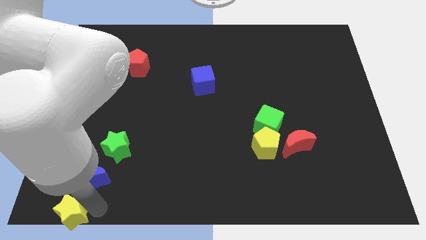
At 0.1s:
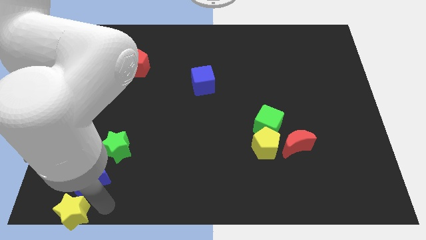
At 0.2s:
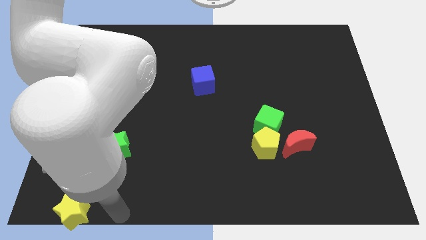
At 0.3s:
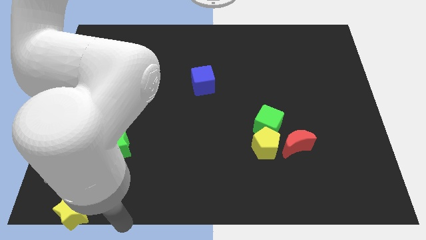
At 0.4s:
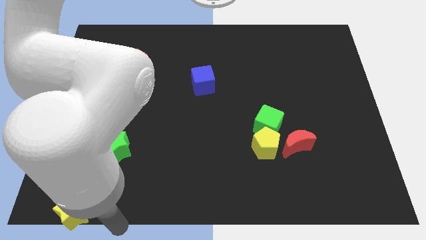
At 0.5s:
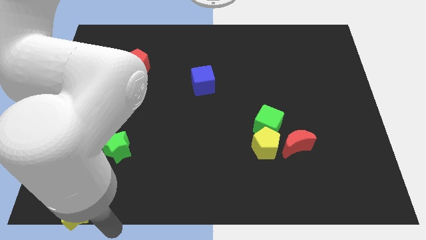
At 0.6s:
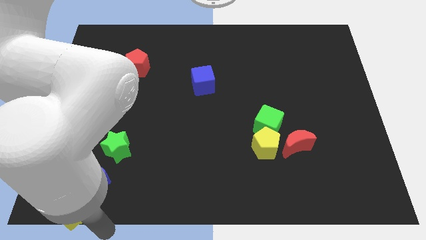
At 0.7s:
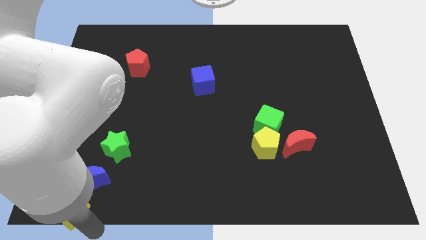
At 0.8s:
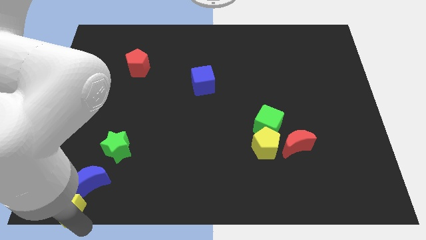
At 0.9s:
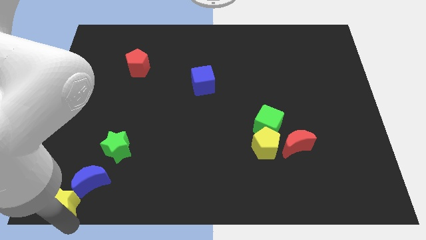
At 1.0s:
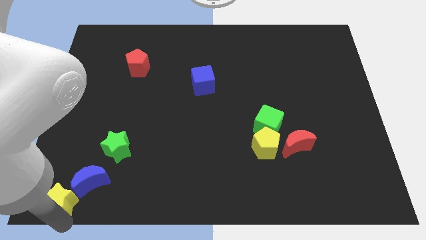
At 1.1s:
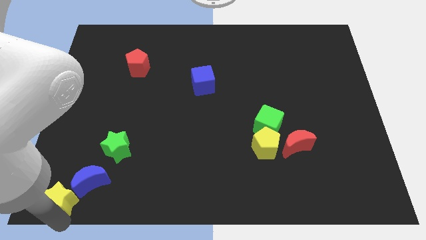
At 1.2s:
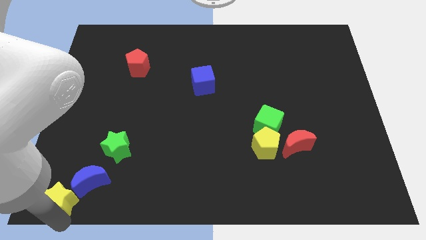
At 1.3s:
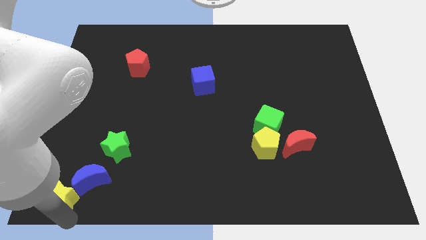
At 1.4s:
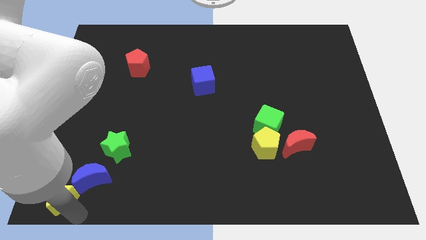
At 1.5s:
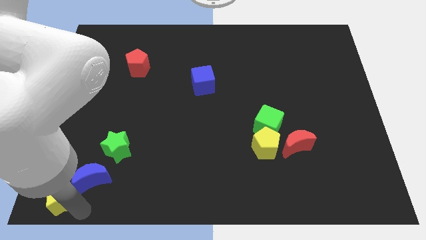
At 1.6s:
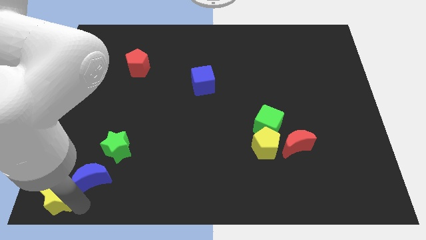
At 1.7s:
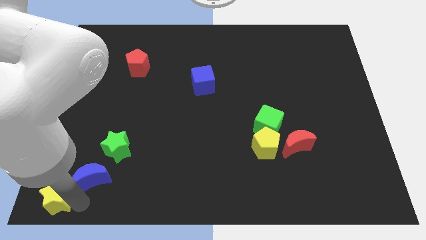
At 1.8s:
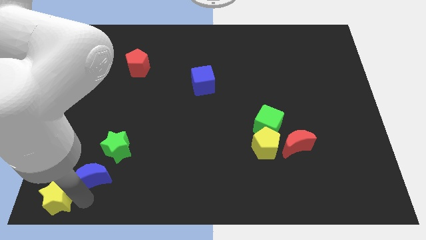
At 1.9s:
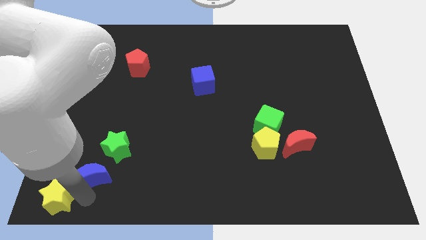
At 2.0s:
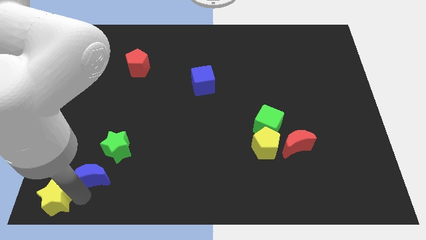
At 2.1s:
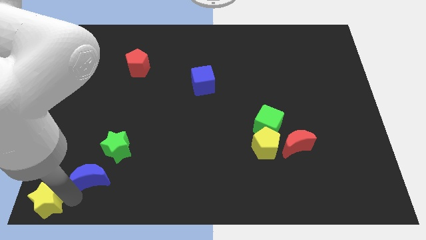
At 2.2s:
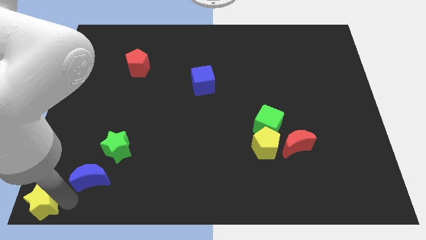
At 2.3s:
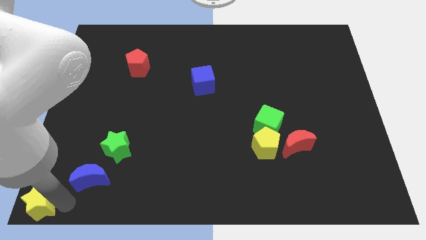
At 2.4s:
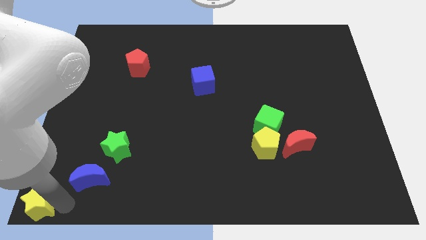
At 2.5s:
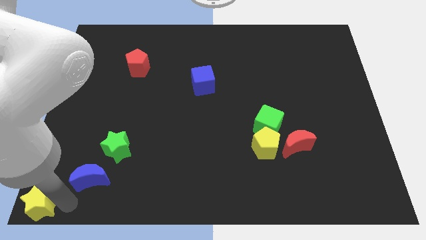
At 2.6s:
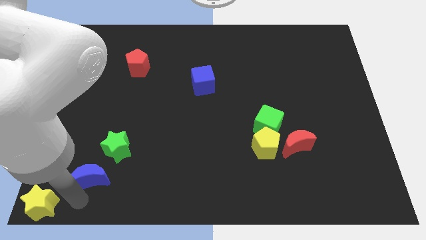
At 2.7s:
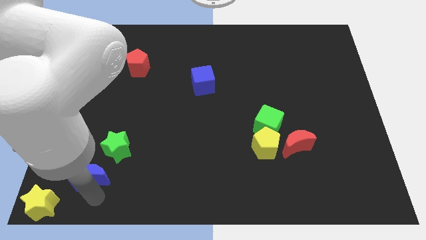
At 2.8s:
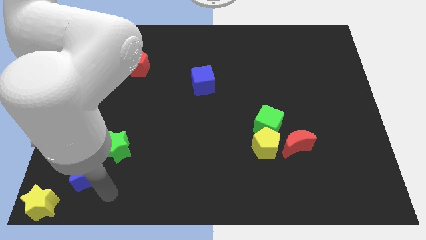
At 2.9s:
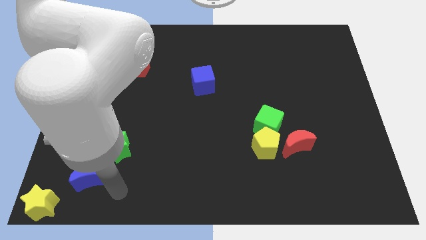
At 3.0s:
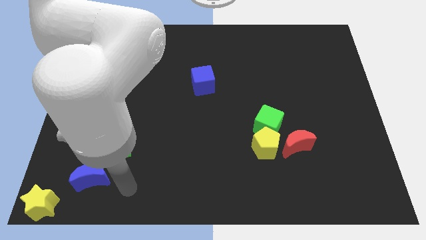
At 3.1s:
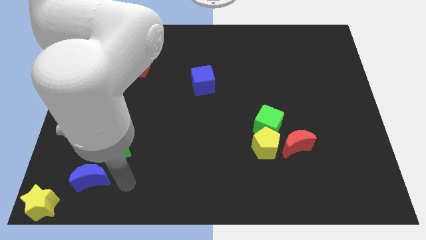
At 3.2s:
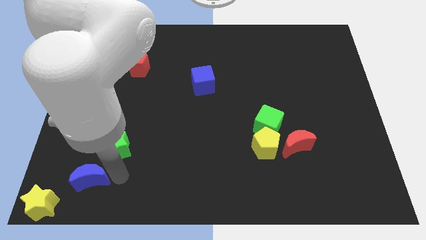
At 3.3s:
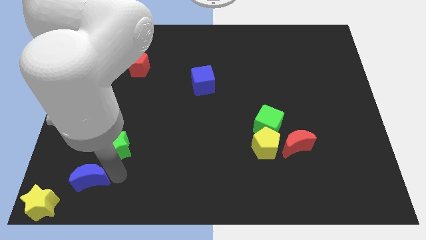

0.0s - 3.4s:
put the yellow star at the bottom left corner of the board

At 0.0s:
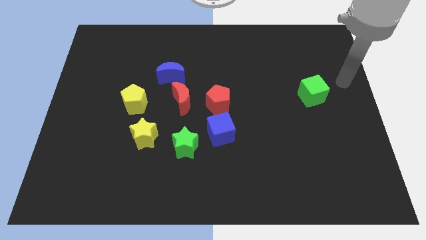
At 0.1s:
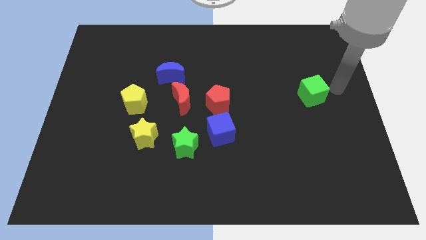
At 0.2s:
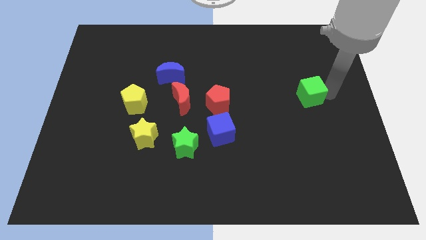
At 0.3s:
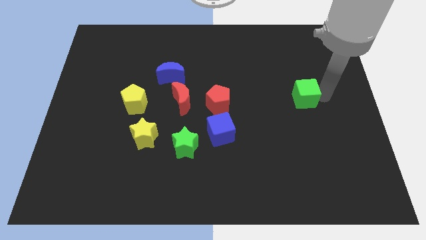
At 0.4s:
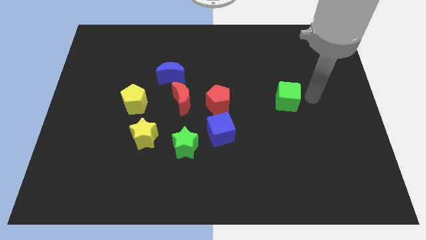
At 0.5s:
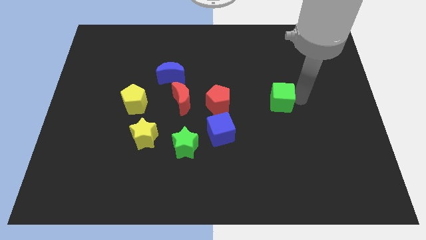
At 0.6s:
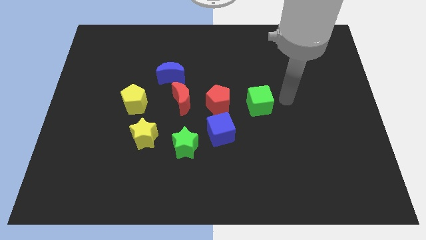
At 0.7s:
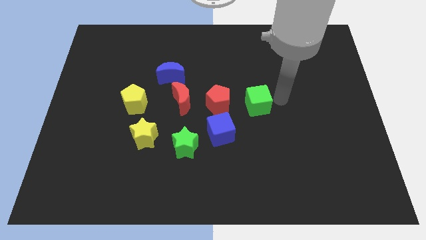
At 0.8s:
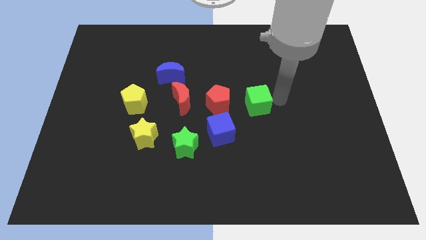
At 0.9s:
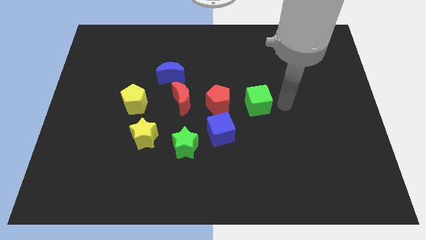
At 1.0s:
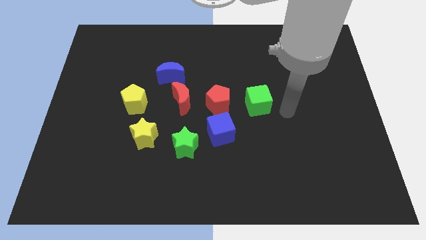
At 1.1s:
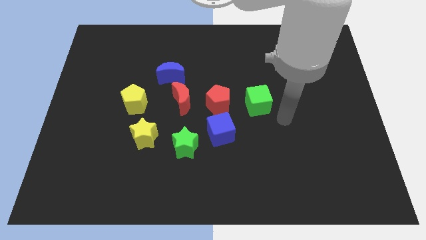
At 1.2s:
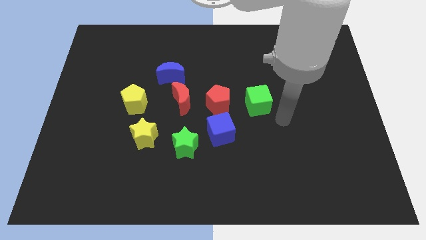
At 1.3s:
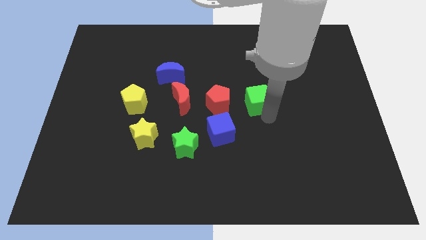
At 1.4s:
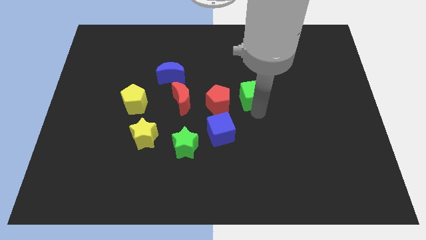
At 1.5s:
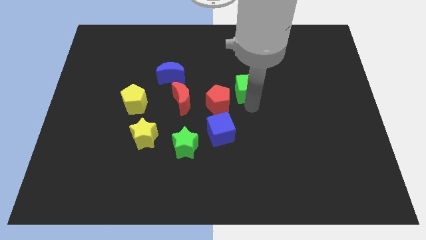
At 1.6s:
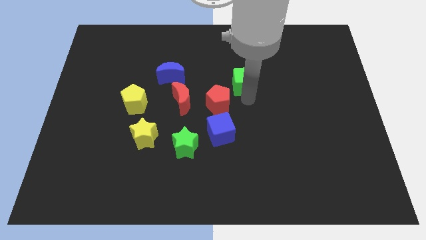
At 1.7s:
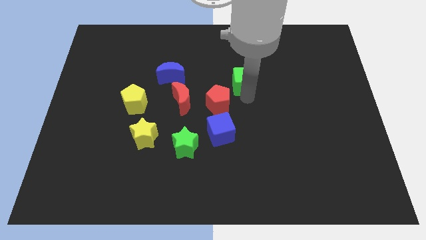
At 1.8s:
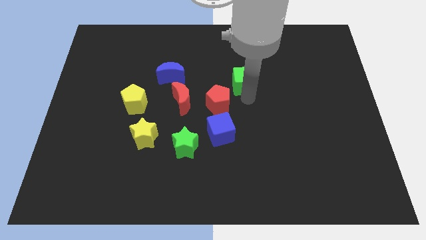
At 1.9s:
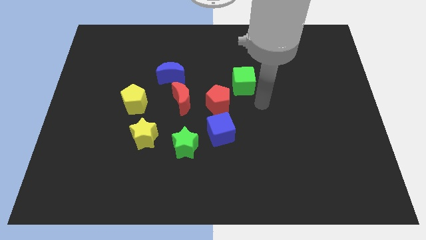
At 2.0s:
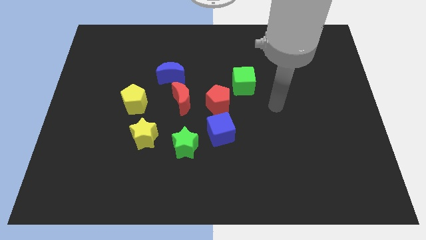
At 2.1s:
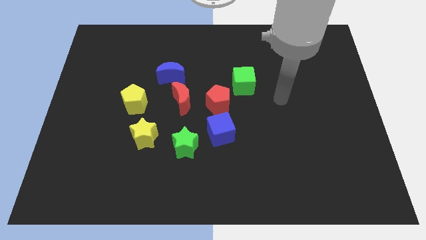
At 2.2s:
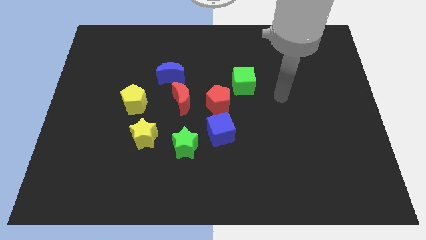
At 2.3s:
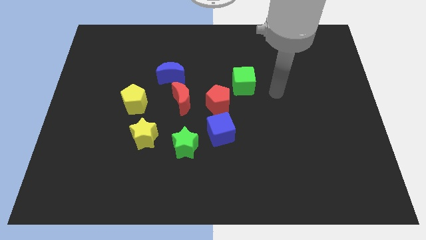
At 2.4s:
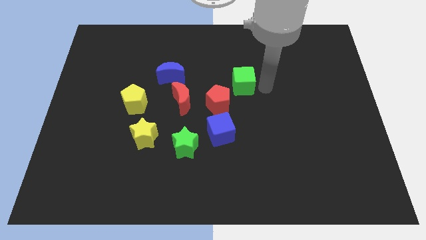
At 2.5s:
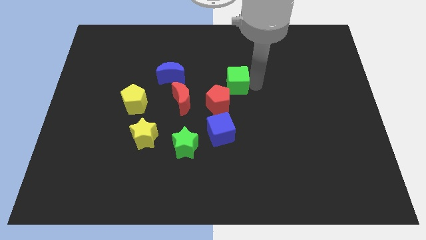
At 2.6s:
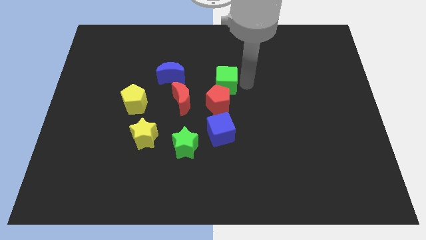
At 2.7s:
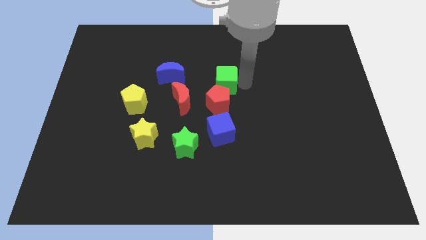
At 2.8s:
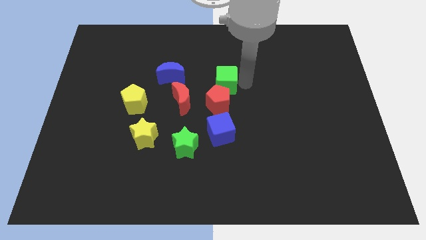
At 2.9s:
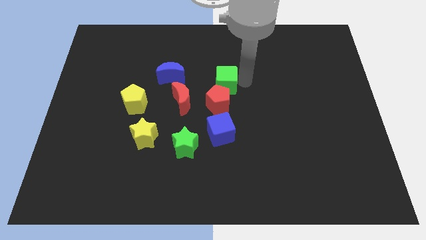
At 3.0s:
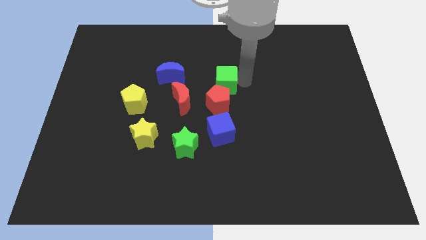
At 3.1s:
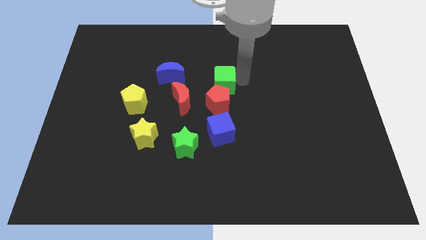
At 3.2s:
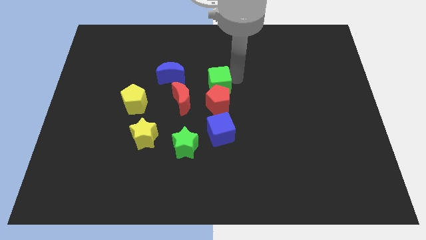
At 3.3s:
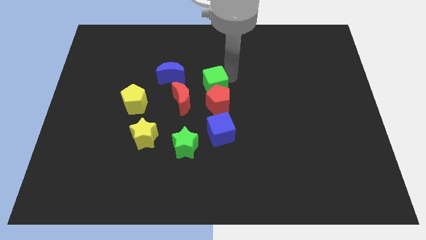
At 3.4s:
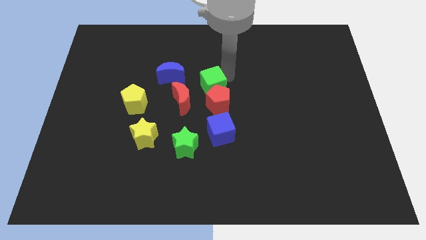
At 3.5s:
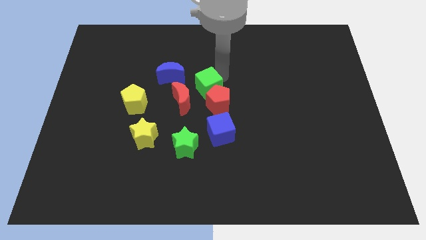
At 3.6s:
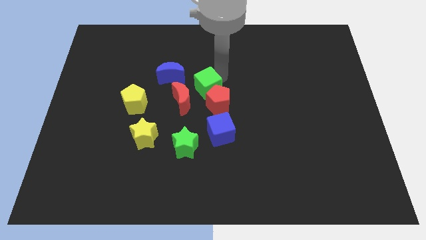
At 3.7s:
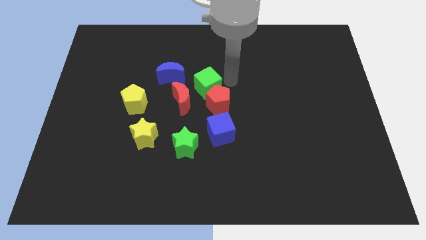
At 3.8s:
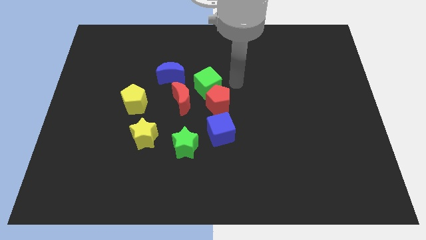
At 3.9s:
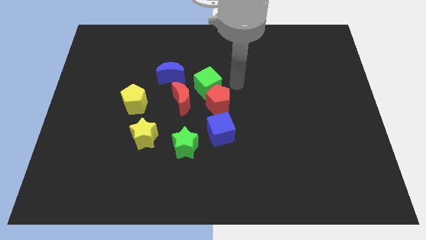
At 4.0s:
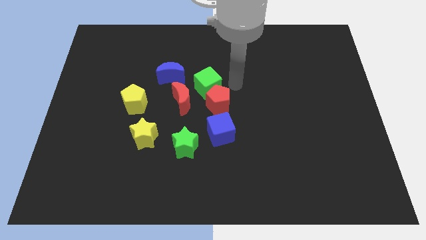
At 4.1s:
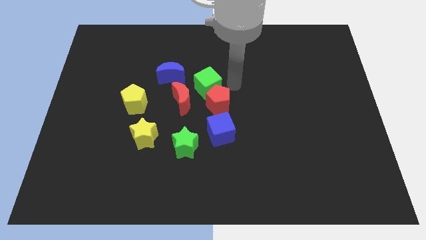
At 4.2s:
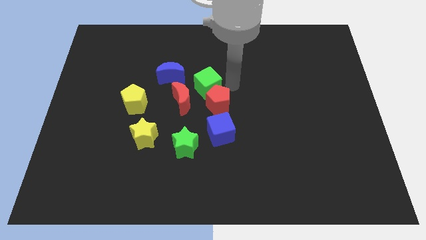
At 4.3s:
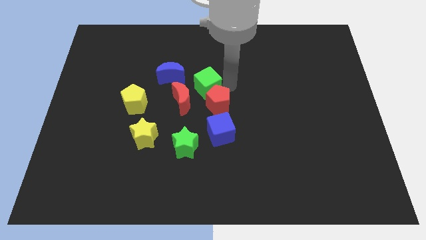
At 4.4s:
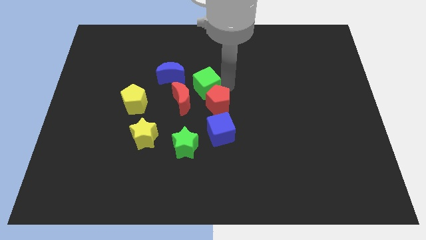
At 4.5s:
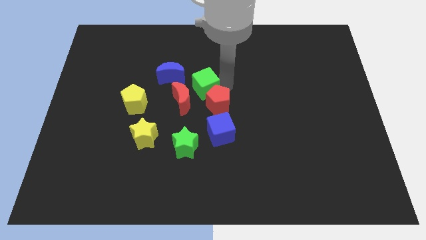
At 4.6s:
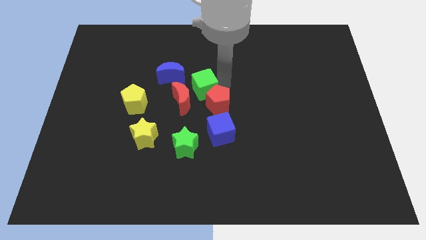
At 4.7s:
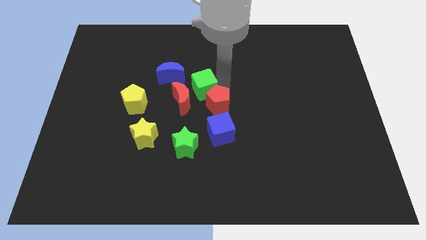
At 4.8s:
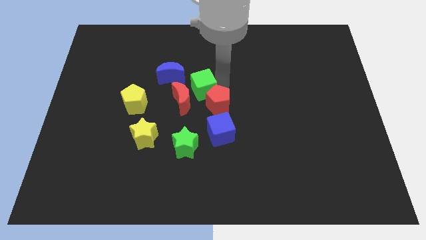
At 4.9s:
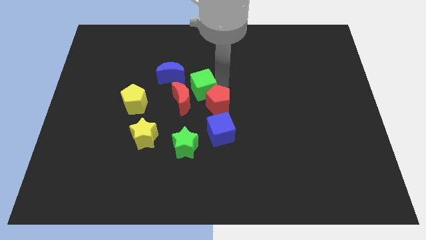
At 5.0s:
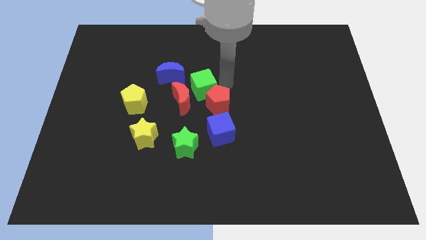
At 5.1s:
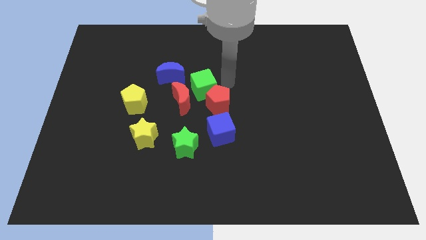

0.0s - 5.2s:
place green cube to the top right of red moon

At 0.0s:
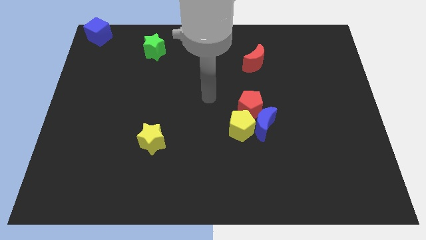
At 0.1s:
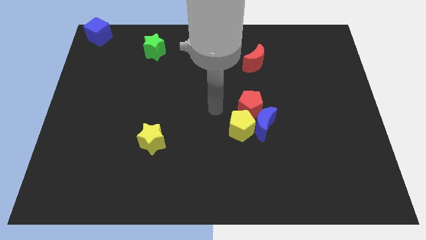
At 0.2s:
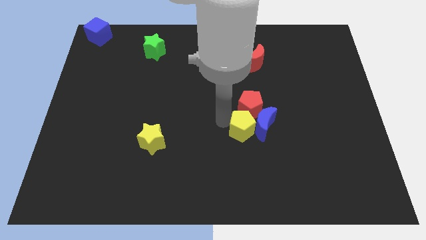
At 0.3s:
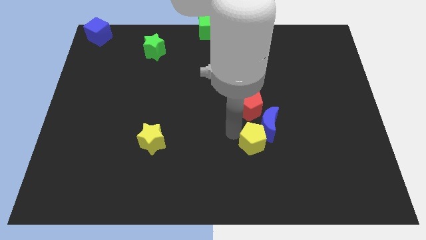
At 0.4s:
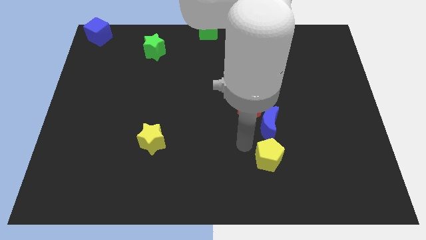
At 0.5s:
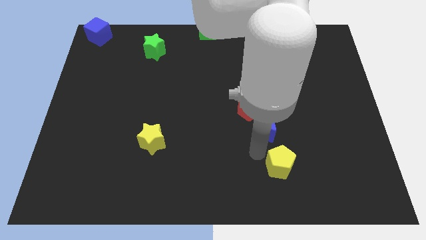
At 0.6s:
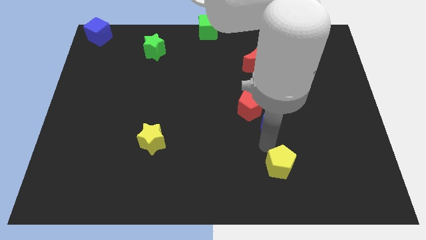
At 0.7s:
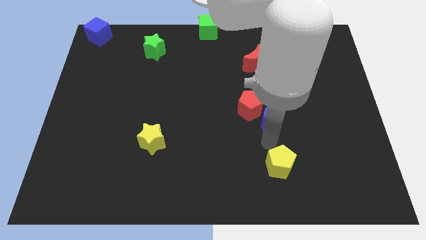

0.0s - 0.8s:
separate the yellow pentagon from the red pentagon and the blue crescent
